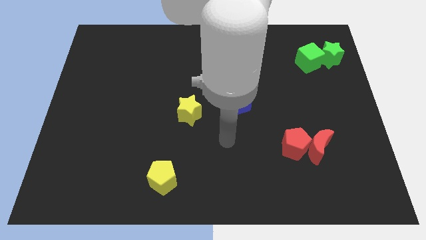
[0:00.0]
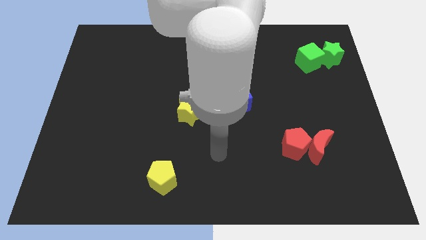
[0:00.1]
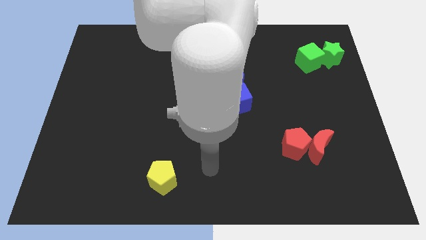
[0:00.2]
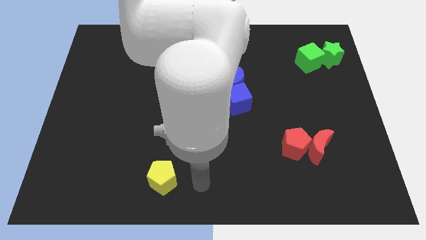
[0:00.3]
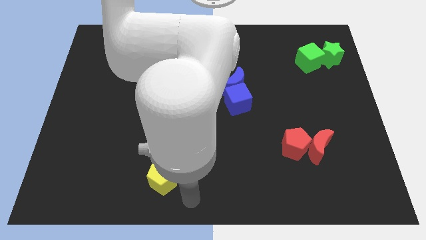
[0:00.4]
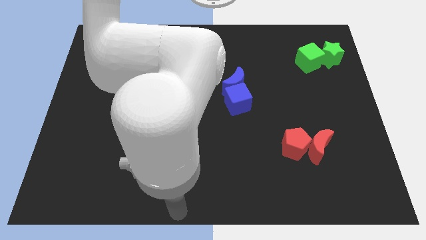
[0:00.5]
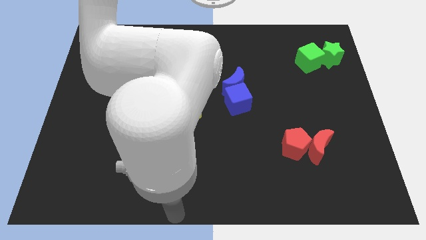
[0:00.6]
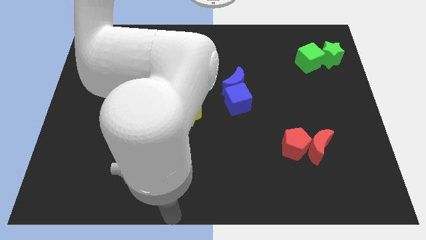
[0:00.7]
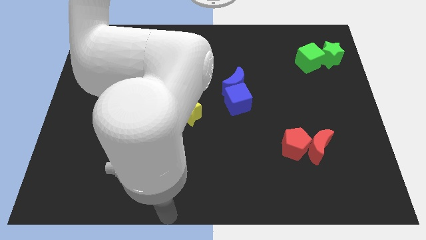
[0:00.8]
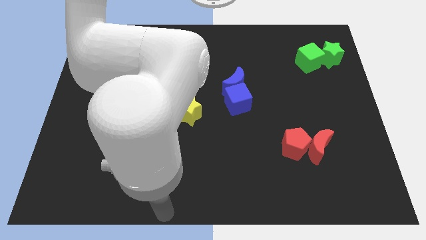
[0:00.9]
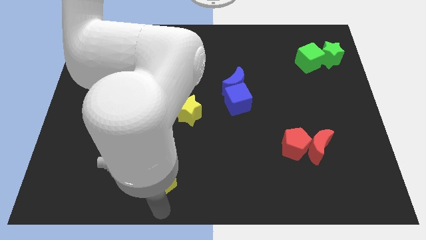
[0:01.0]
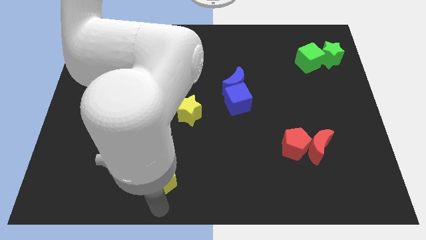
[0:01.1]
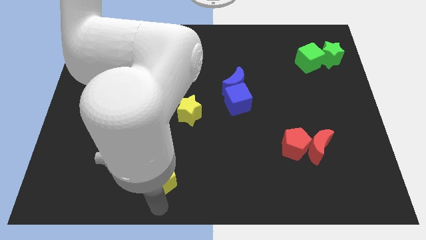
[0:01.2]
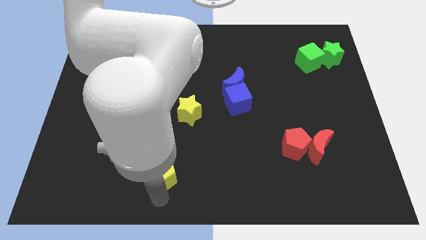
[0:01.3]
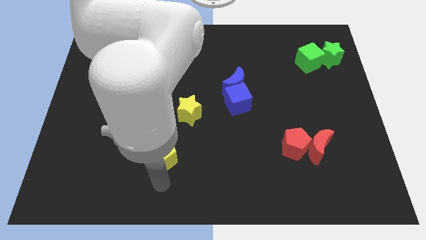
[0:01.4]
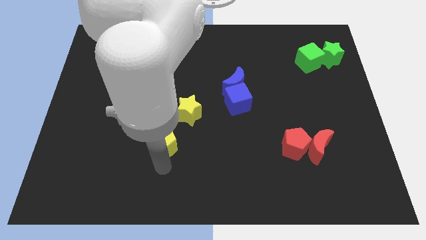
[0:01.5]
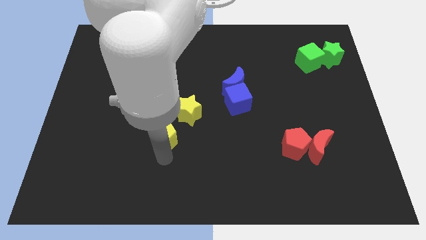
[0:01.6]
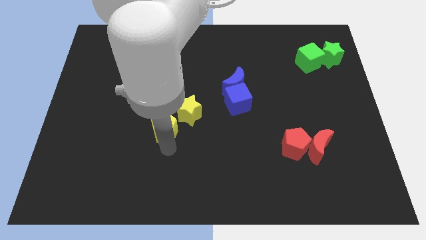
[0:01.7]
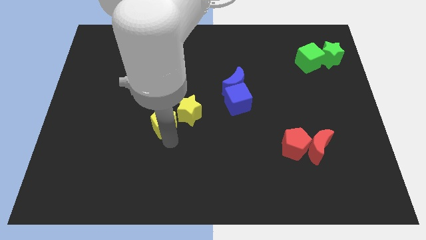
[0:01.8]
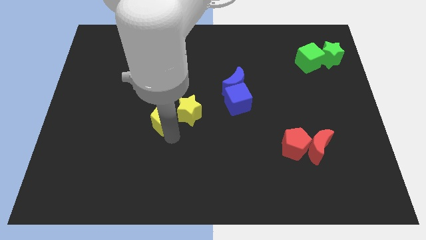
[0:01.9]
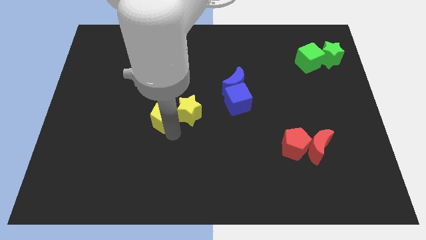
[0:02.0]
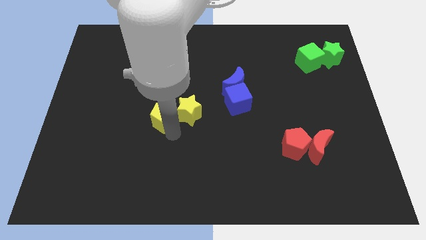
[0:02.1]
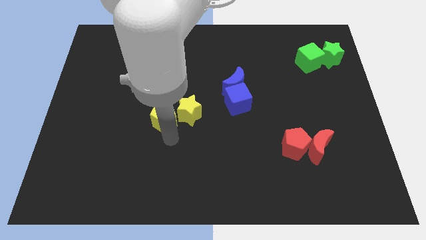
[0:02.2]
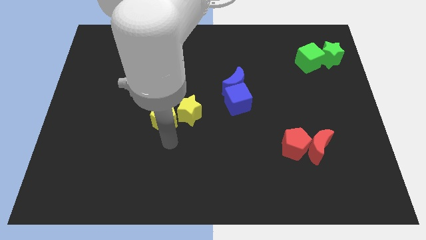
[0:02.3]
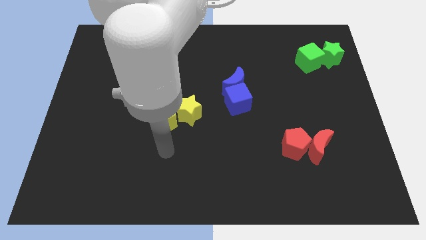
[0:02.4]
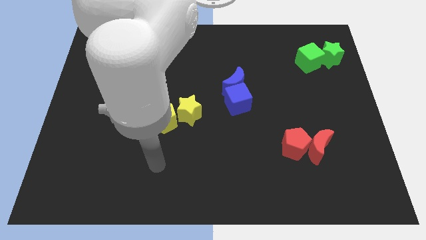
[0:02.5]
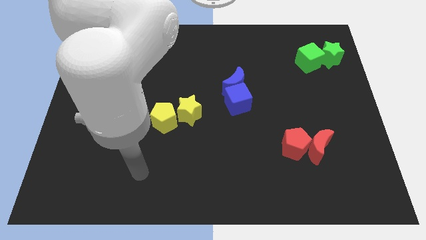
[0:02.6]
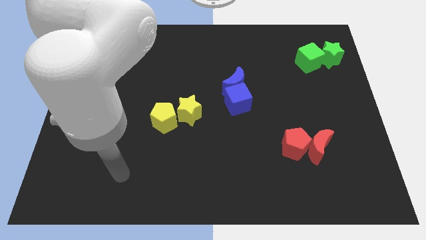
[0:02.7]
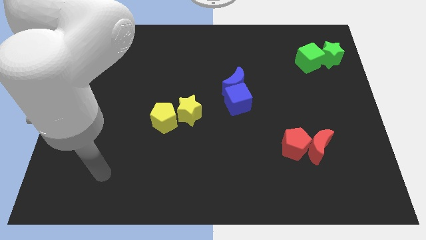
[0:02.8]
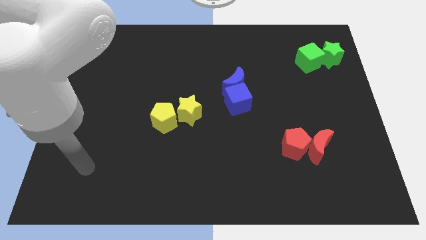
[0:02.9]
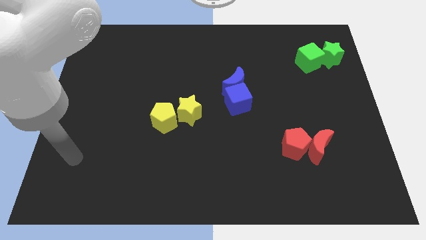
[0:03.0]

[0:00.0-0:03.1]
place the yellow pentagon to the left of the yellow star

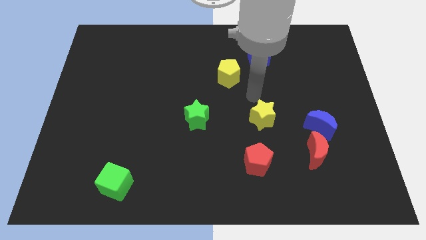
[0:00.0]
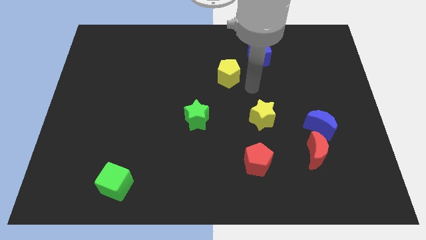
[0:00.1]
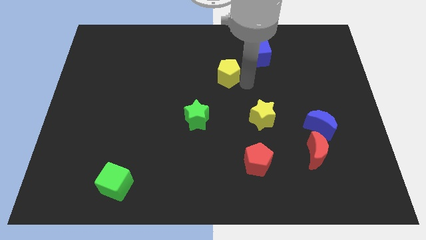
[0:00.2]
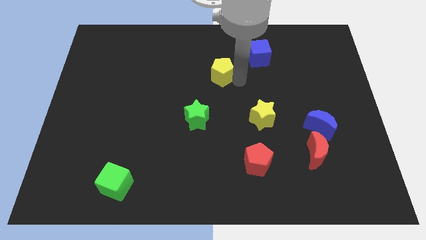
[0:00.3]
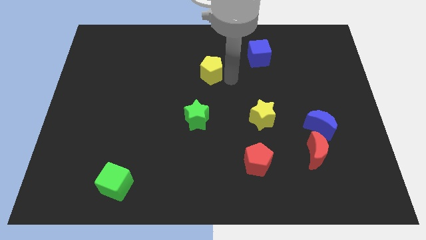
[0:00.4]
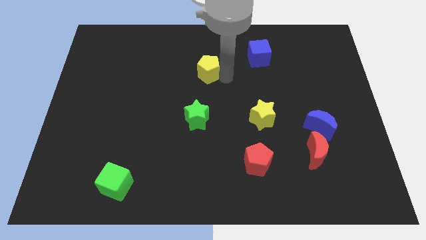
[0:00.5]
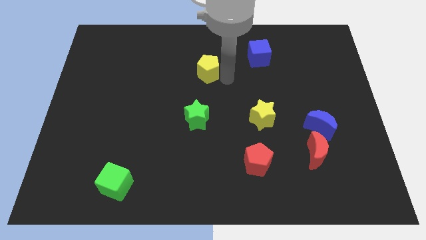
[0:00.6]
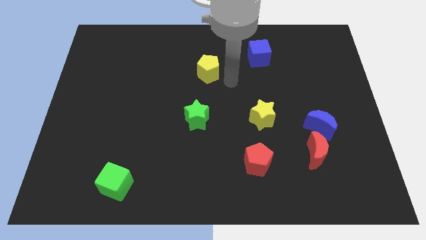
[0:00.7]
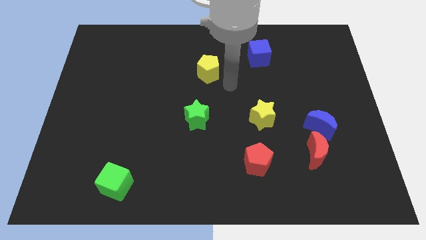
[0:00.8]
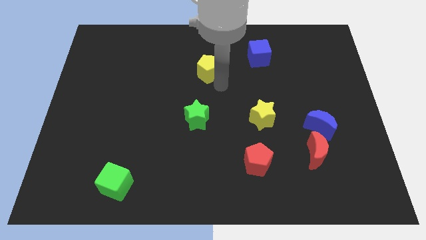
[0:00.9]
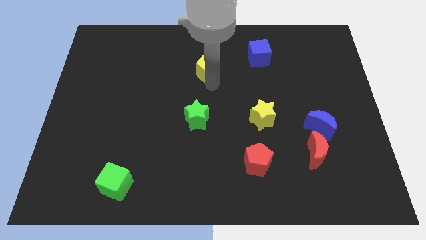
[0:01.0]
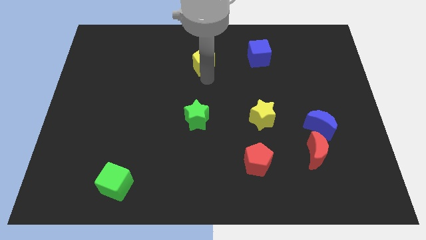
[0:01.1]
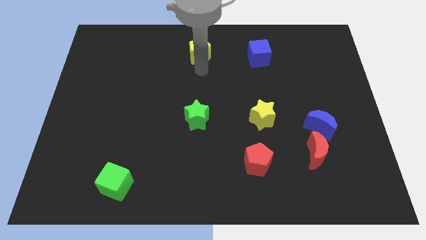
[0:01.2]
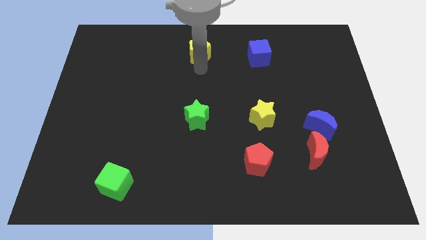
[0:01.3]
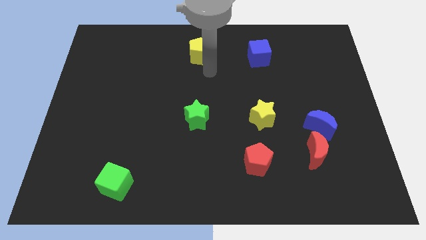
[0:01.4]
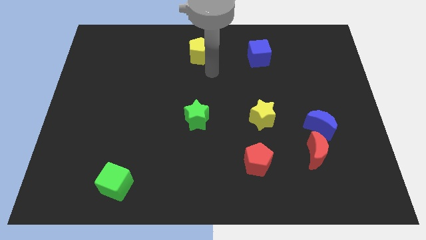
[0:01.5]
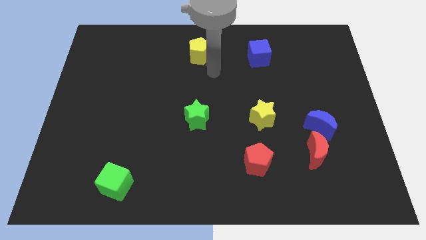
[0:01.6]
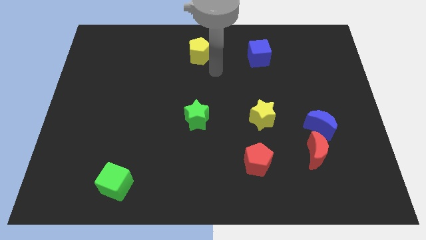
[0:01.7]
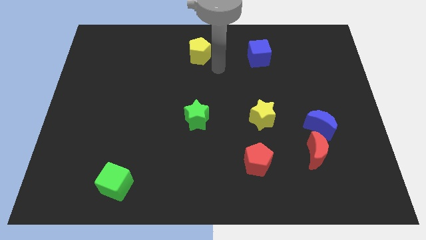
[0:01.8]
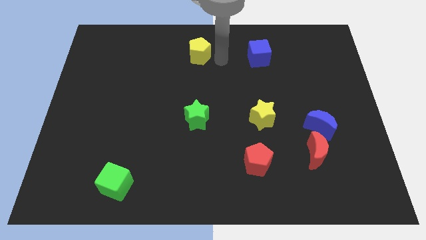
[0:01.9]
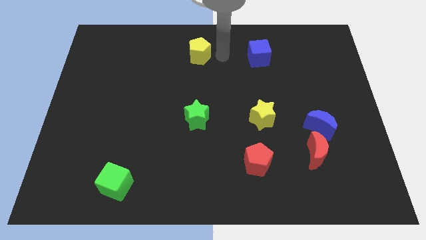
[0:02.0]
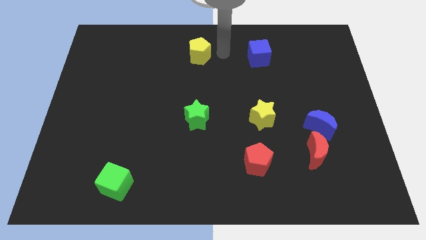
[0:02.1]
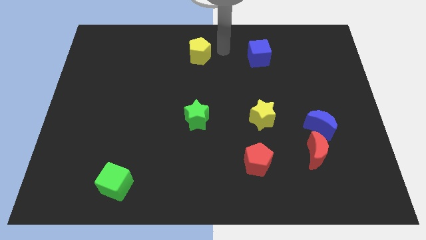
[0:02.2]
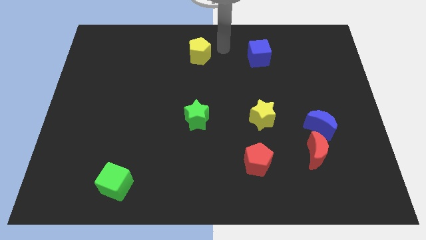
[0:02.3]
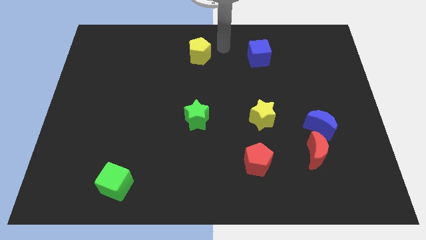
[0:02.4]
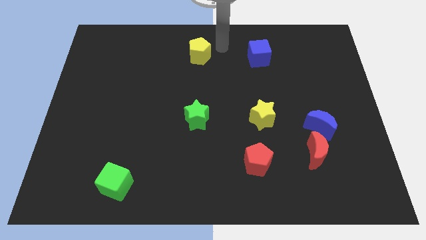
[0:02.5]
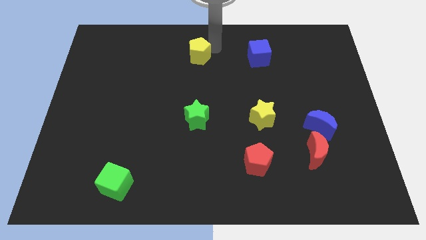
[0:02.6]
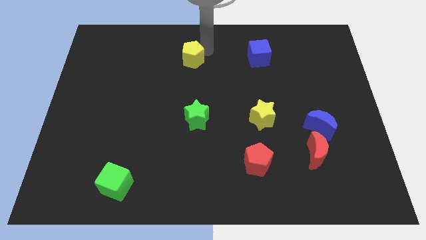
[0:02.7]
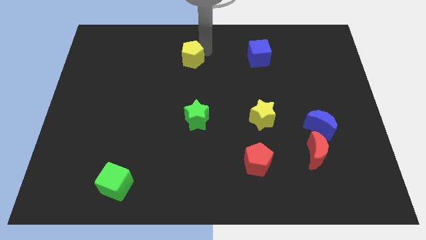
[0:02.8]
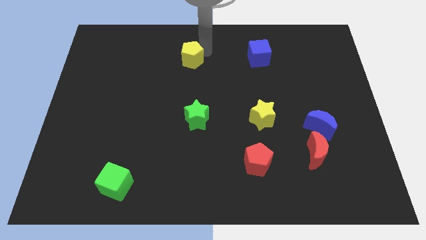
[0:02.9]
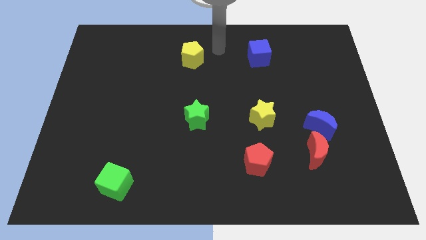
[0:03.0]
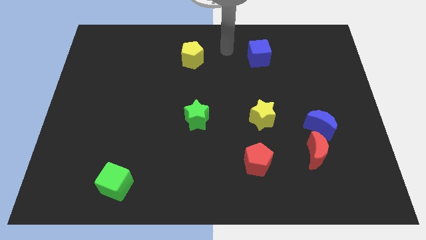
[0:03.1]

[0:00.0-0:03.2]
move the yellow pentagon vertically above the green star

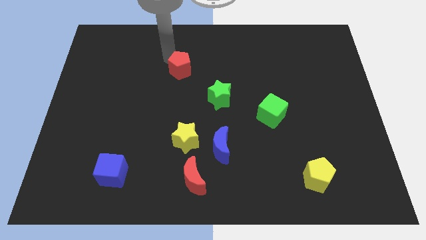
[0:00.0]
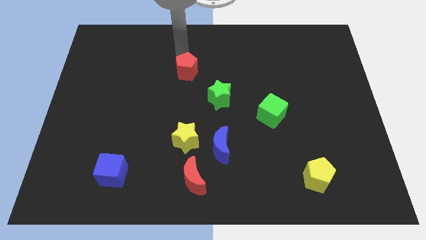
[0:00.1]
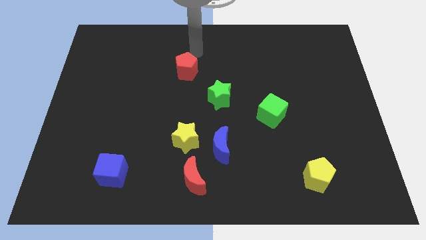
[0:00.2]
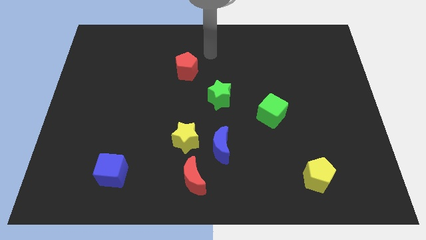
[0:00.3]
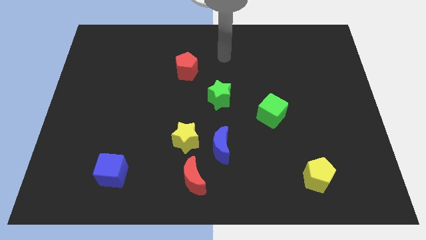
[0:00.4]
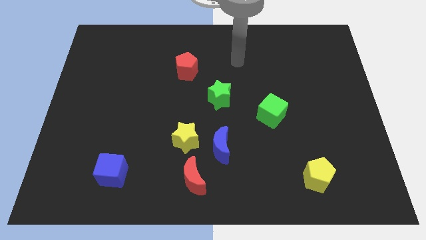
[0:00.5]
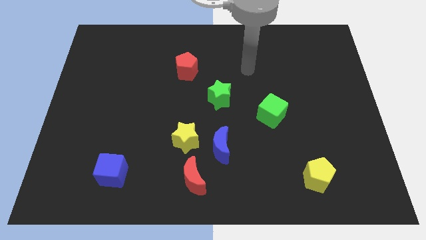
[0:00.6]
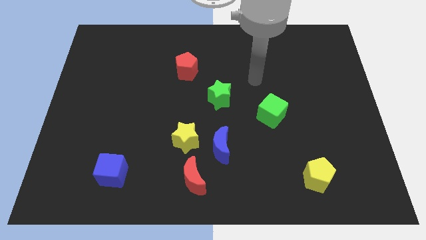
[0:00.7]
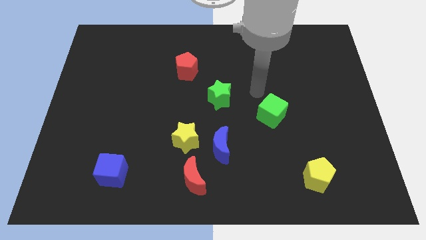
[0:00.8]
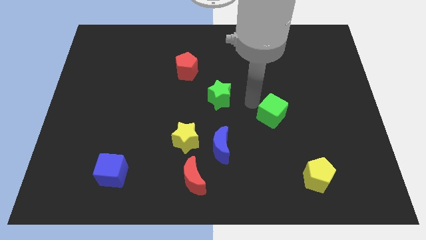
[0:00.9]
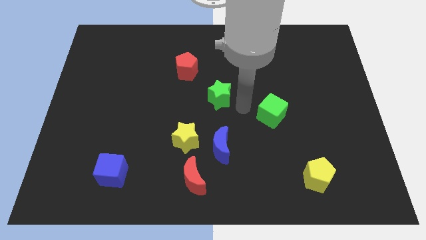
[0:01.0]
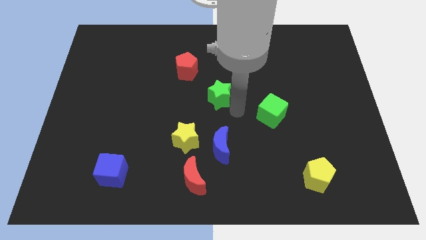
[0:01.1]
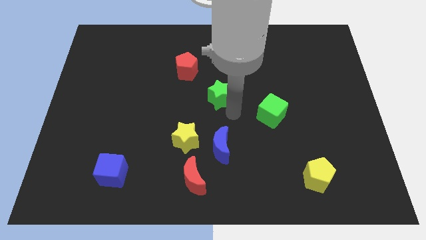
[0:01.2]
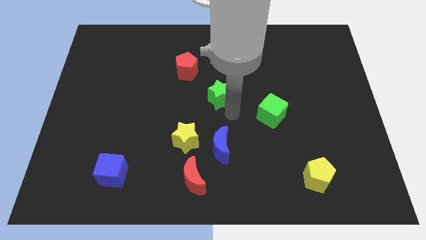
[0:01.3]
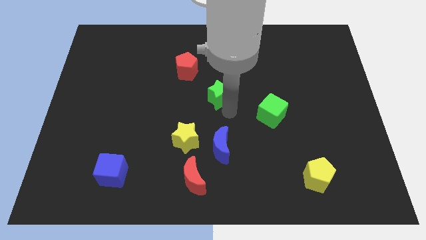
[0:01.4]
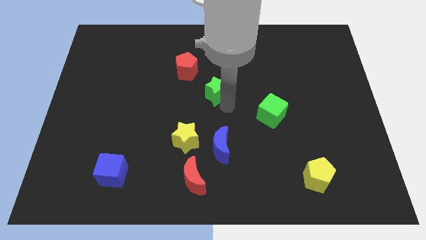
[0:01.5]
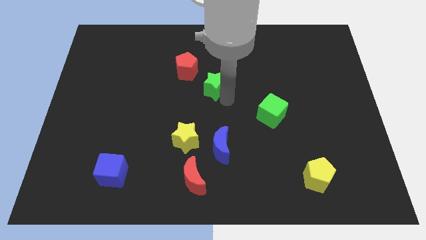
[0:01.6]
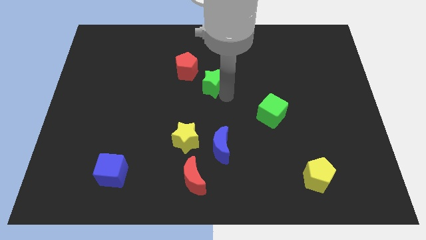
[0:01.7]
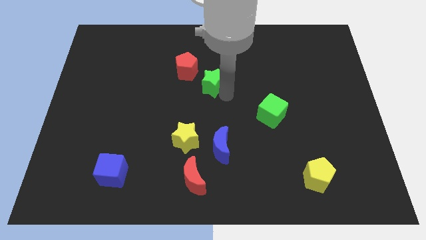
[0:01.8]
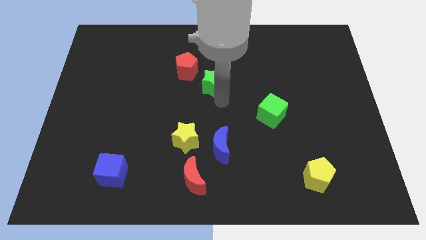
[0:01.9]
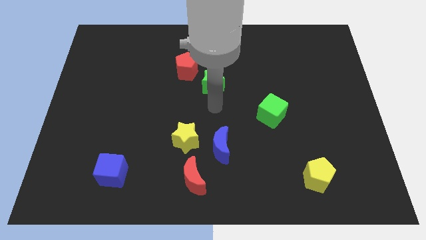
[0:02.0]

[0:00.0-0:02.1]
move the green star close to the red pentagon

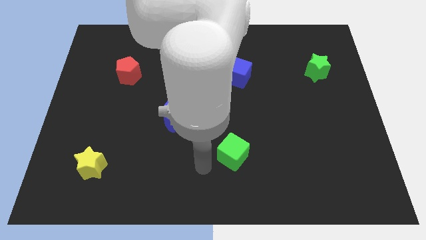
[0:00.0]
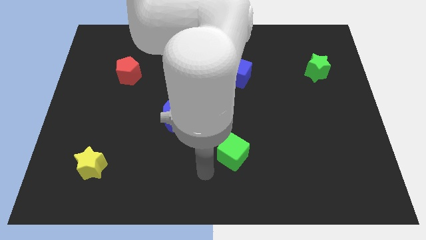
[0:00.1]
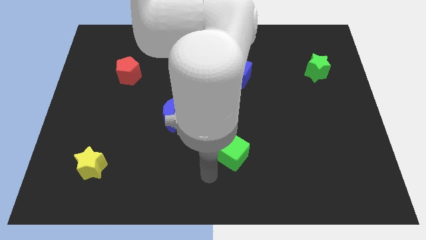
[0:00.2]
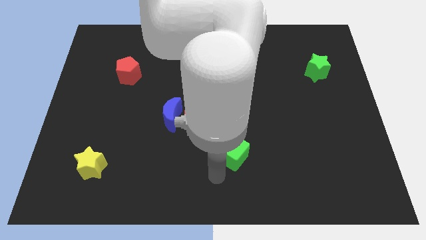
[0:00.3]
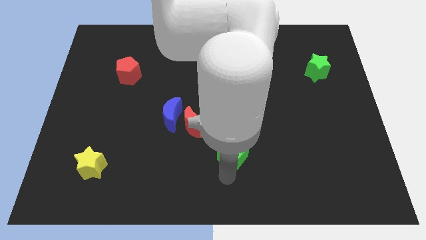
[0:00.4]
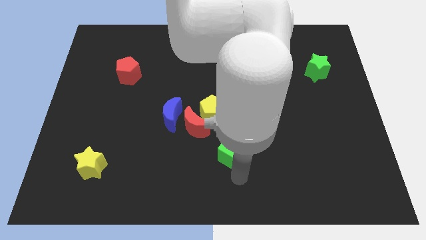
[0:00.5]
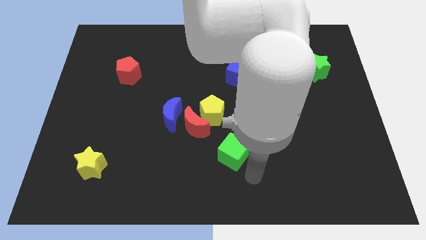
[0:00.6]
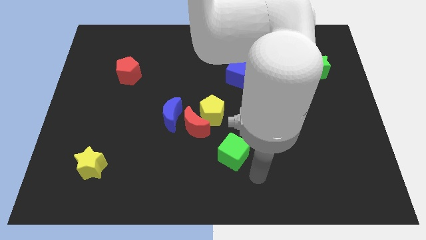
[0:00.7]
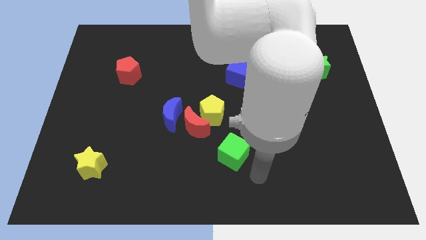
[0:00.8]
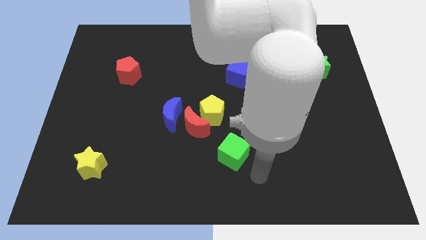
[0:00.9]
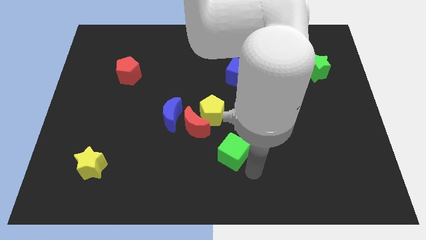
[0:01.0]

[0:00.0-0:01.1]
move your arm towards the green cube
